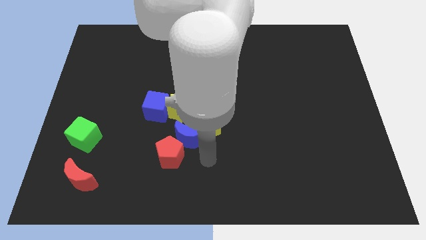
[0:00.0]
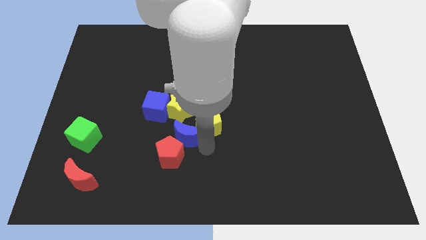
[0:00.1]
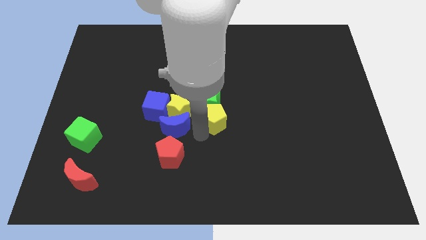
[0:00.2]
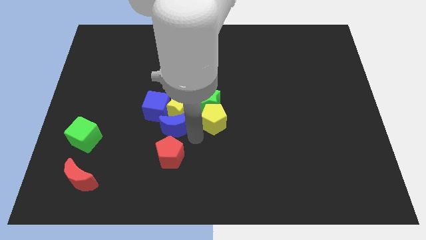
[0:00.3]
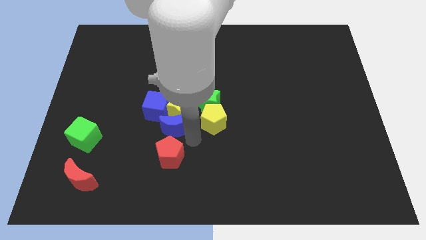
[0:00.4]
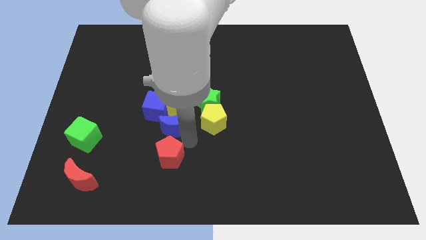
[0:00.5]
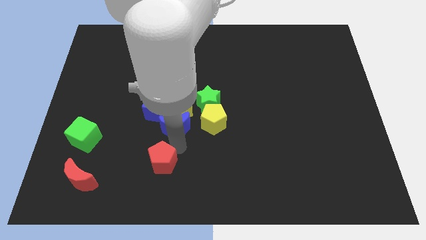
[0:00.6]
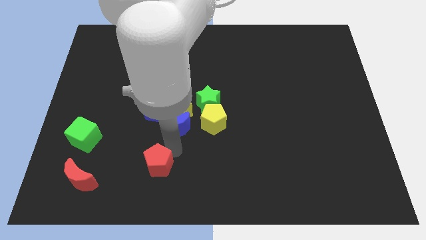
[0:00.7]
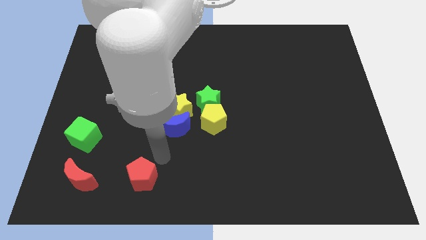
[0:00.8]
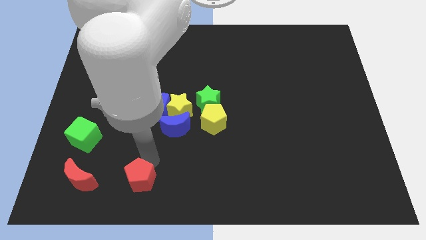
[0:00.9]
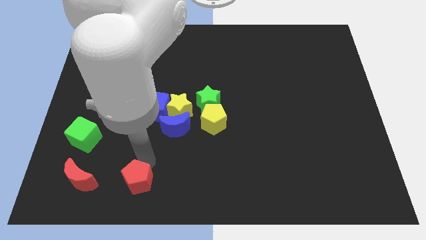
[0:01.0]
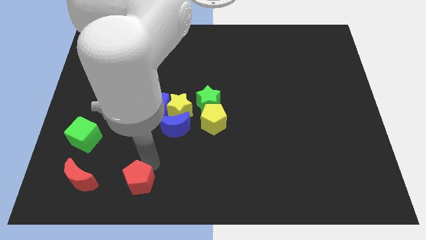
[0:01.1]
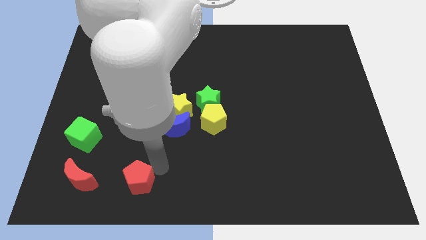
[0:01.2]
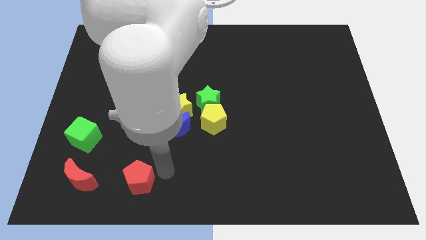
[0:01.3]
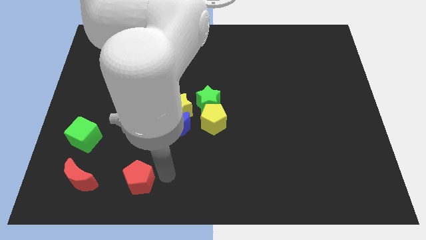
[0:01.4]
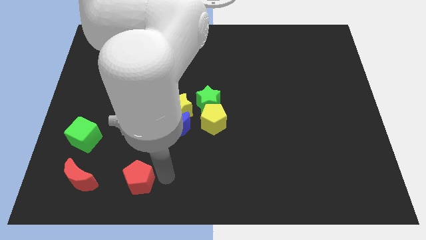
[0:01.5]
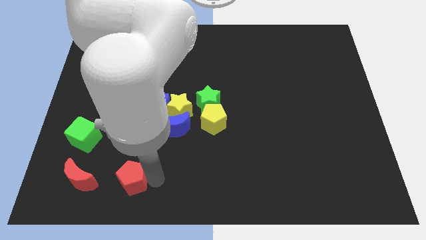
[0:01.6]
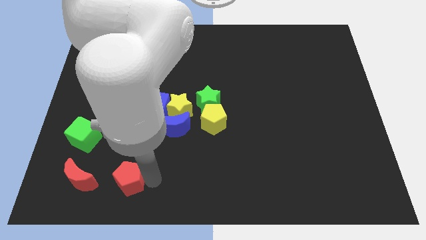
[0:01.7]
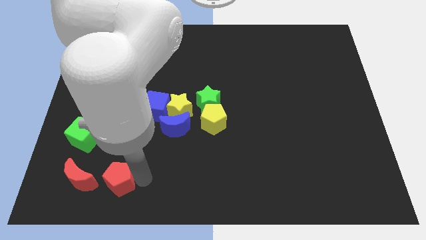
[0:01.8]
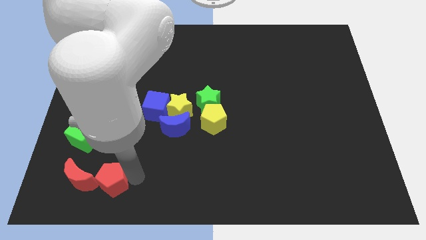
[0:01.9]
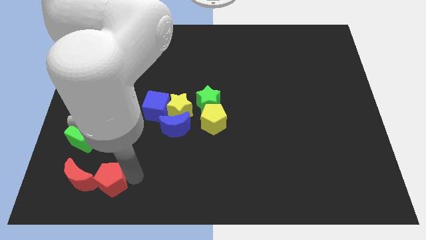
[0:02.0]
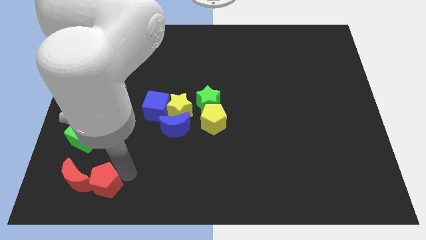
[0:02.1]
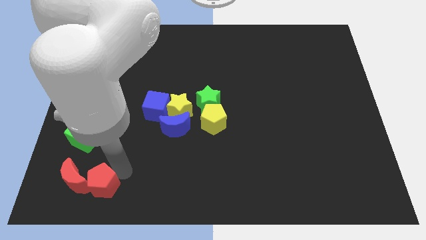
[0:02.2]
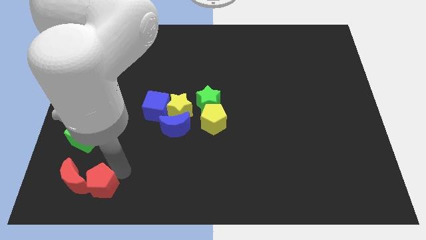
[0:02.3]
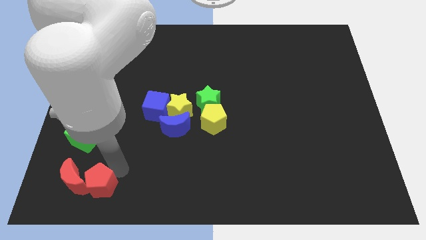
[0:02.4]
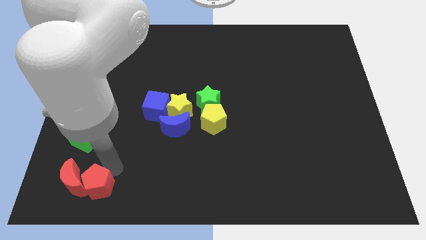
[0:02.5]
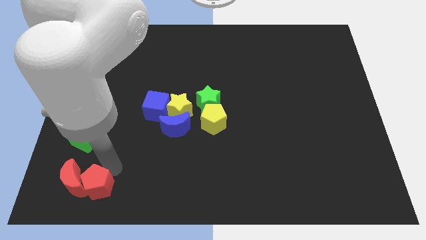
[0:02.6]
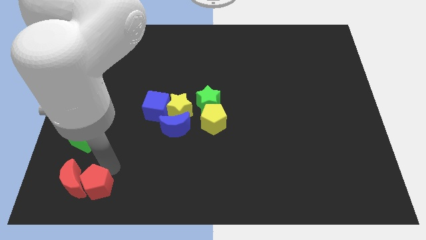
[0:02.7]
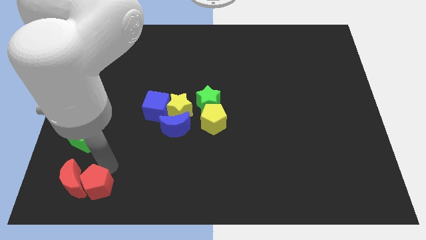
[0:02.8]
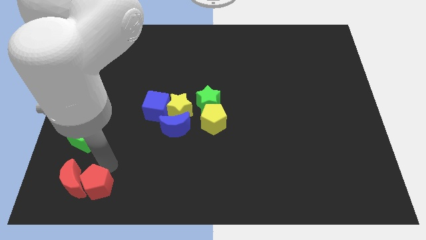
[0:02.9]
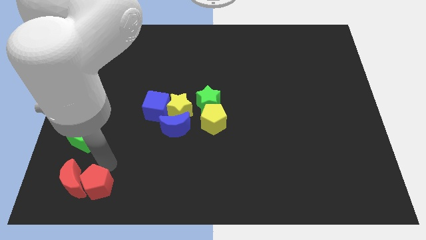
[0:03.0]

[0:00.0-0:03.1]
move red pentagon into the red crescent

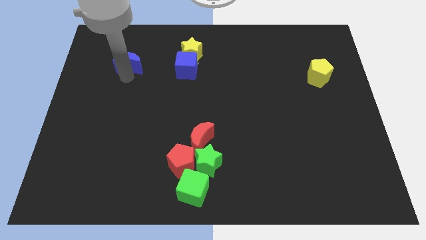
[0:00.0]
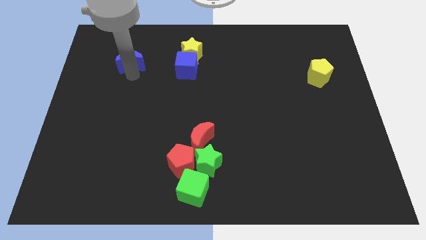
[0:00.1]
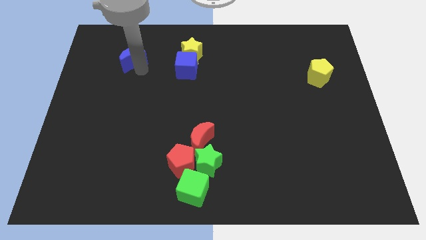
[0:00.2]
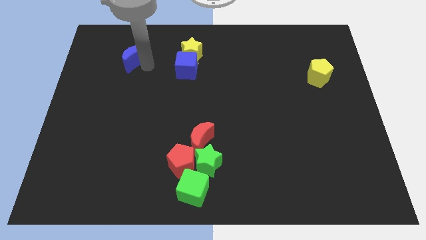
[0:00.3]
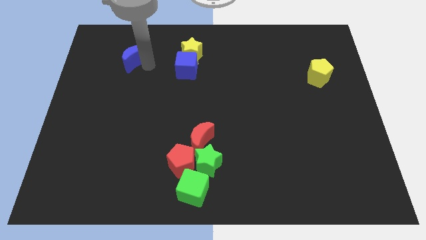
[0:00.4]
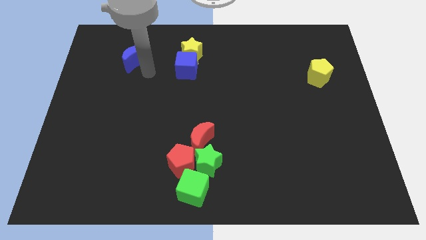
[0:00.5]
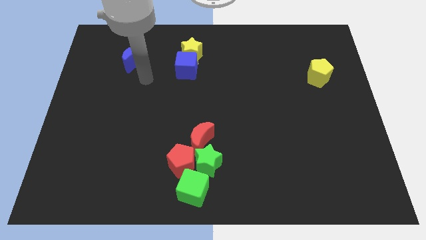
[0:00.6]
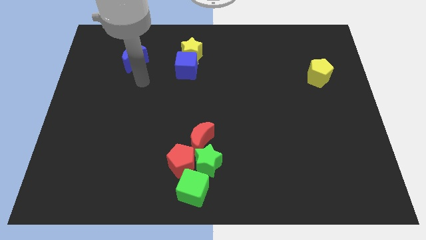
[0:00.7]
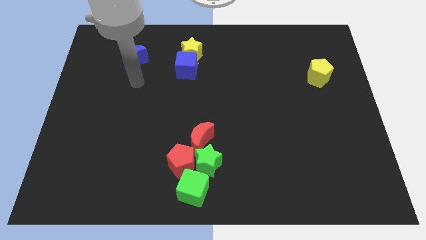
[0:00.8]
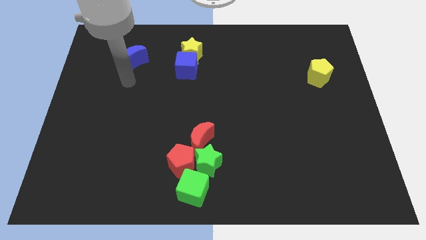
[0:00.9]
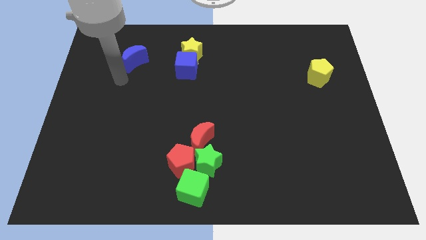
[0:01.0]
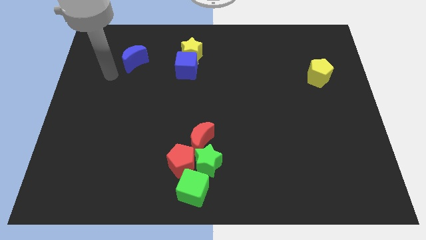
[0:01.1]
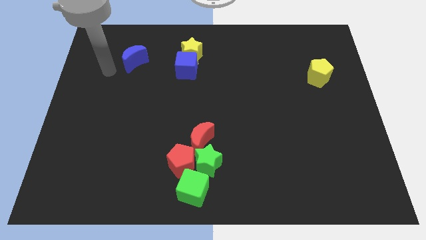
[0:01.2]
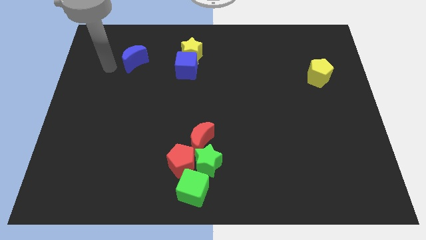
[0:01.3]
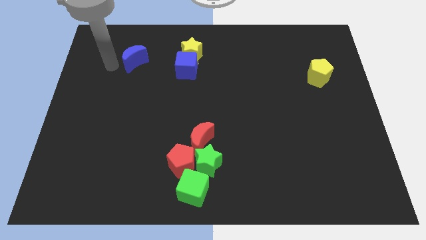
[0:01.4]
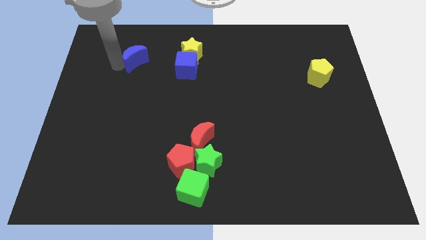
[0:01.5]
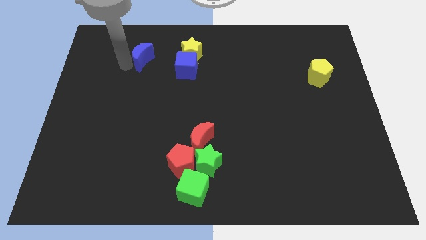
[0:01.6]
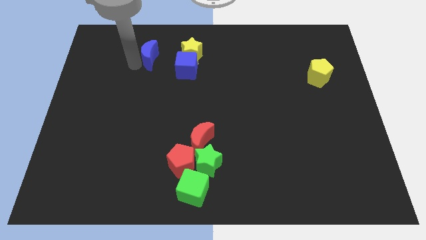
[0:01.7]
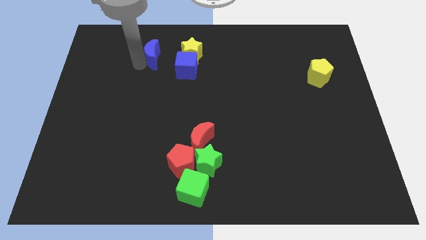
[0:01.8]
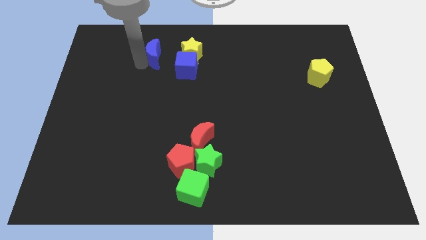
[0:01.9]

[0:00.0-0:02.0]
move blue crescent towards left yellow star

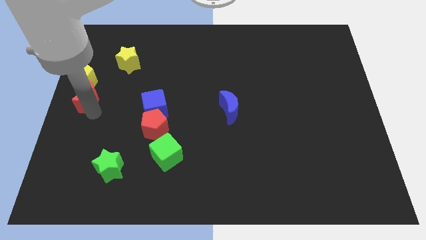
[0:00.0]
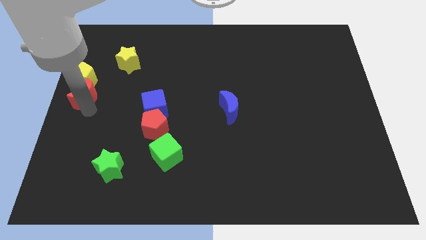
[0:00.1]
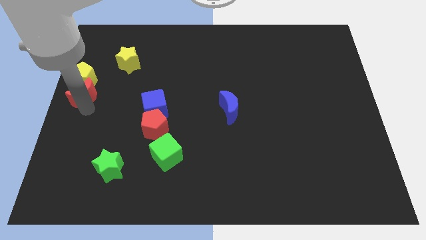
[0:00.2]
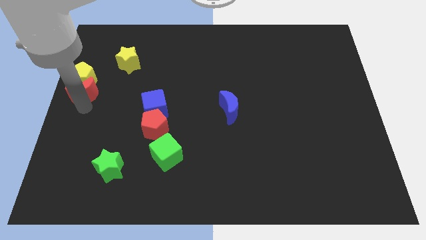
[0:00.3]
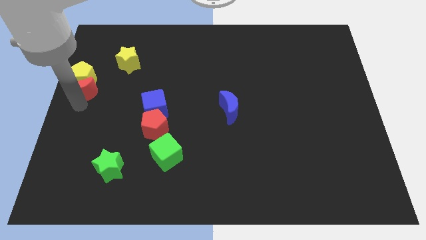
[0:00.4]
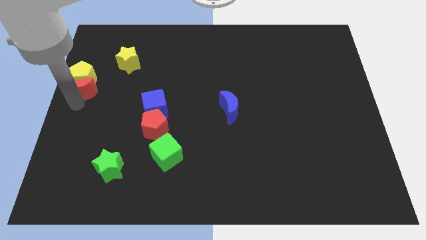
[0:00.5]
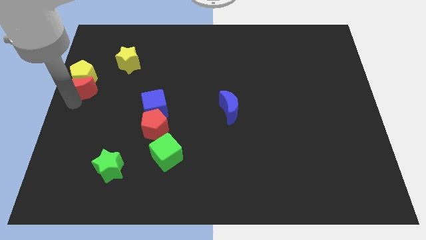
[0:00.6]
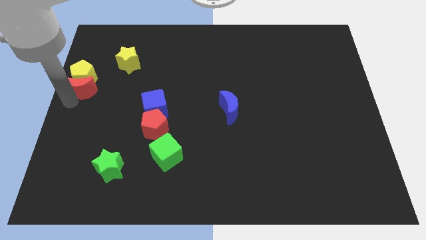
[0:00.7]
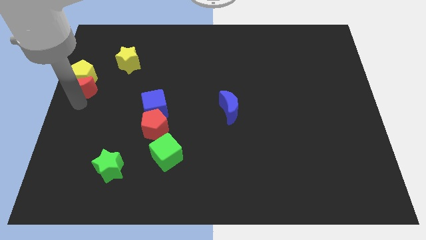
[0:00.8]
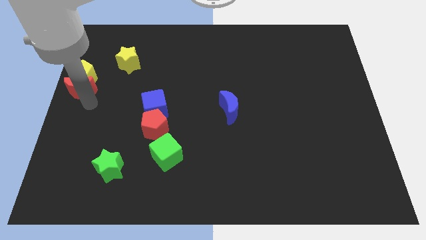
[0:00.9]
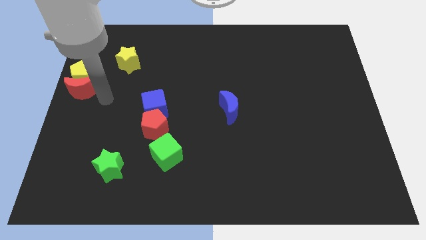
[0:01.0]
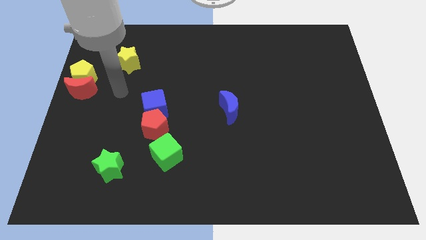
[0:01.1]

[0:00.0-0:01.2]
push the red moon into the yellow pentagon

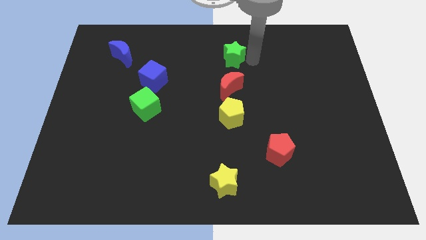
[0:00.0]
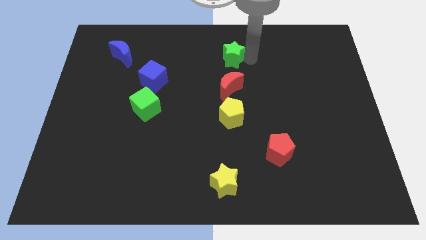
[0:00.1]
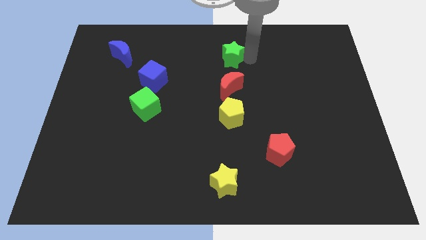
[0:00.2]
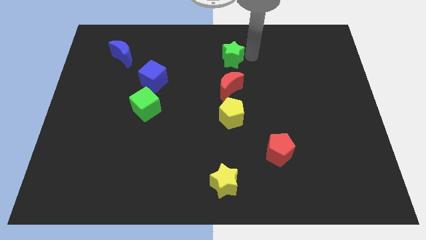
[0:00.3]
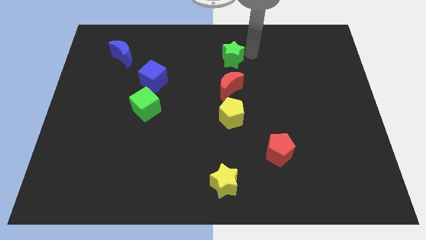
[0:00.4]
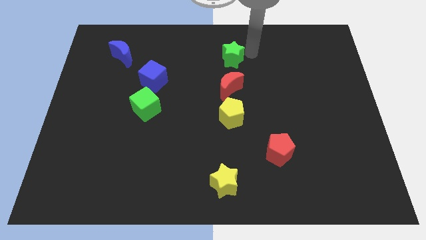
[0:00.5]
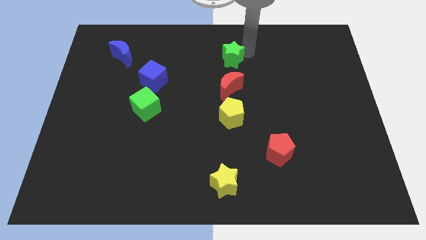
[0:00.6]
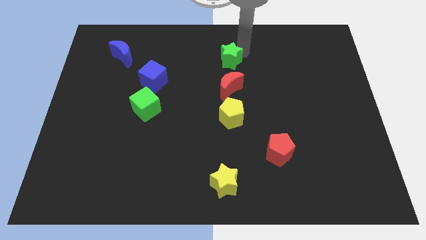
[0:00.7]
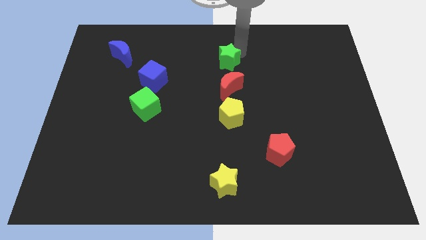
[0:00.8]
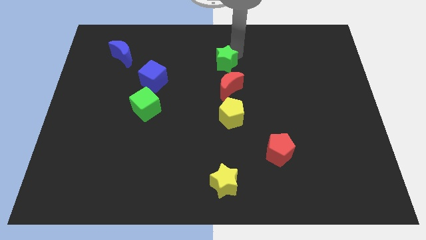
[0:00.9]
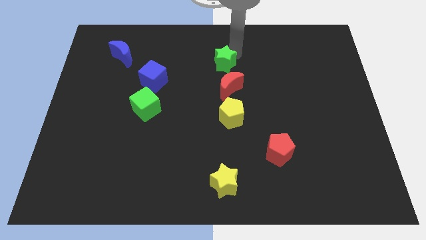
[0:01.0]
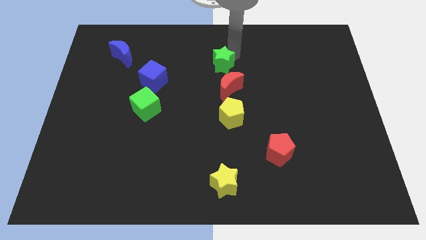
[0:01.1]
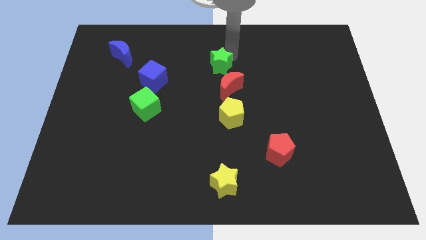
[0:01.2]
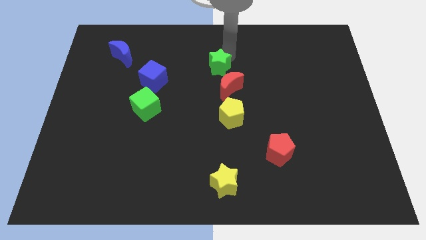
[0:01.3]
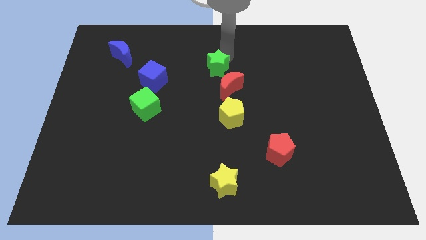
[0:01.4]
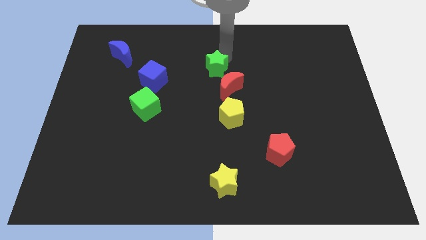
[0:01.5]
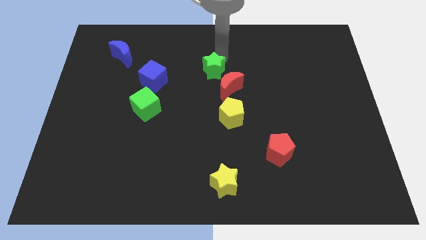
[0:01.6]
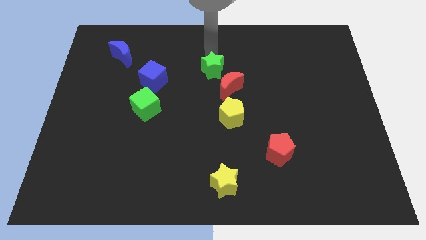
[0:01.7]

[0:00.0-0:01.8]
push the green star to the top left of the red crescent

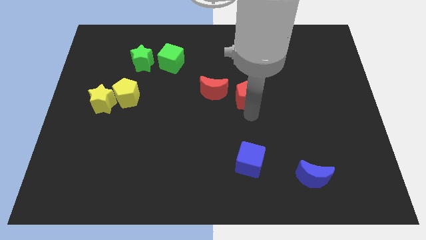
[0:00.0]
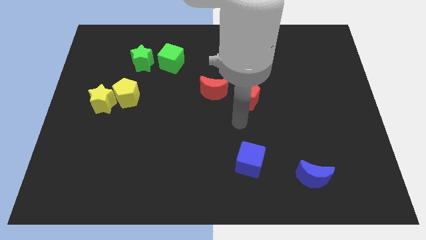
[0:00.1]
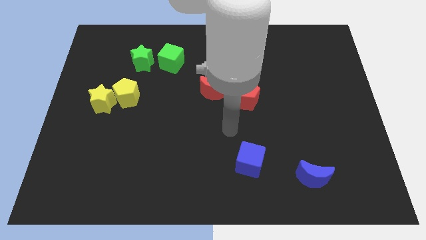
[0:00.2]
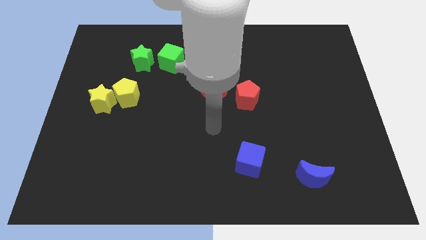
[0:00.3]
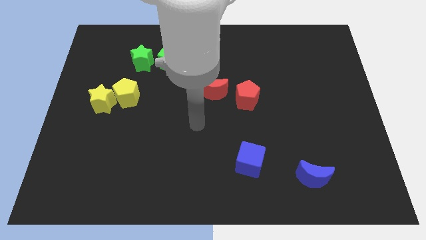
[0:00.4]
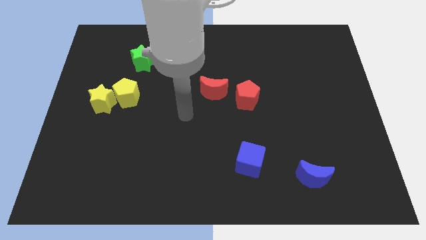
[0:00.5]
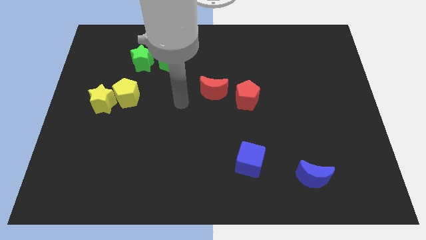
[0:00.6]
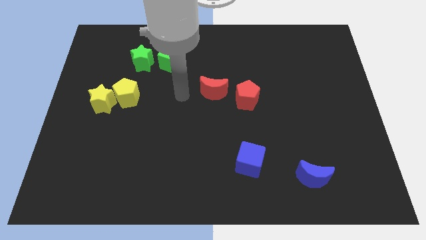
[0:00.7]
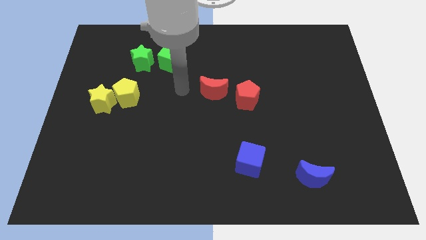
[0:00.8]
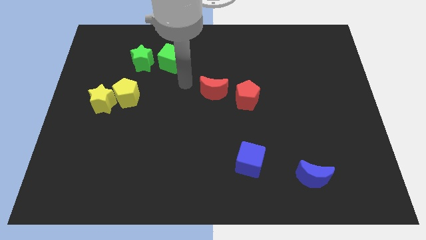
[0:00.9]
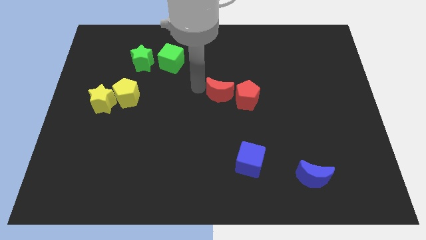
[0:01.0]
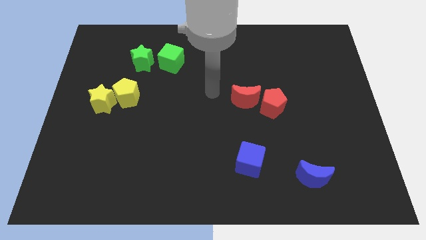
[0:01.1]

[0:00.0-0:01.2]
move your arm away from the red pentagon
